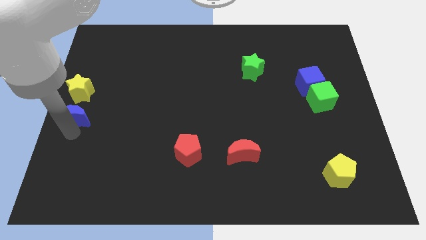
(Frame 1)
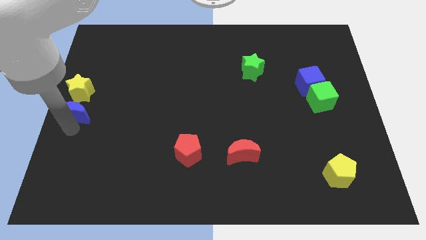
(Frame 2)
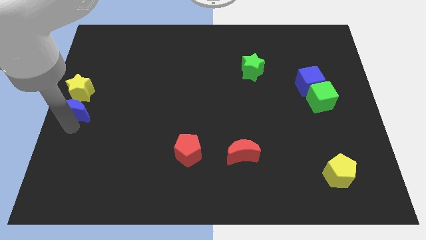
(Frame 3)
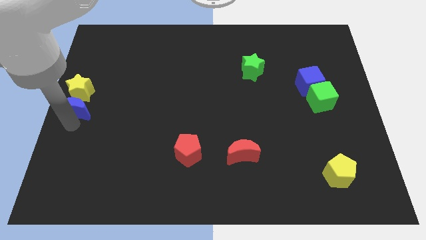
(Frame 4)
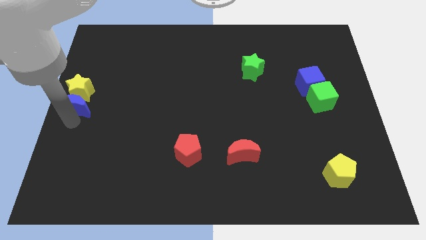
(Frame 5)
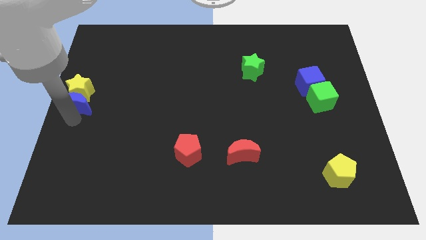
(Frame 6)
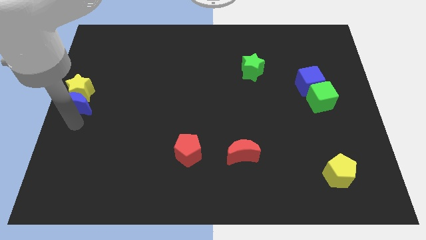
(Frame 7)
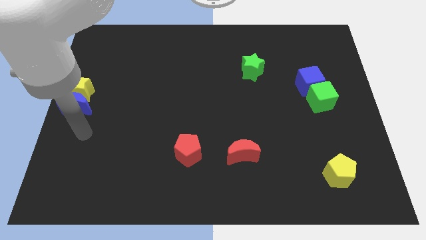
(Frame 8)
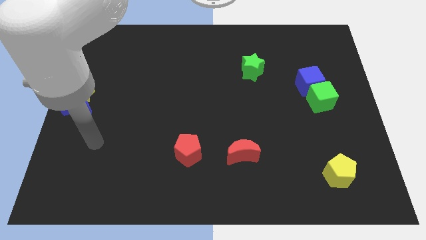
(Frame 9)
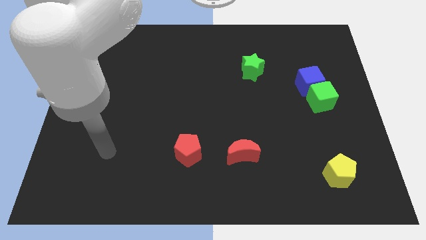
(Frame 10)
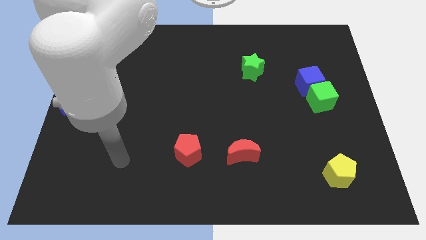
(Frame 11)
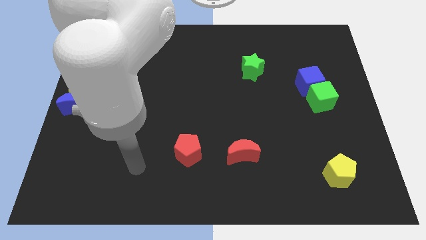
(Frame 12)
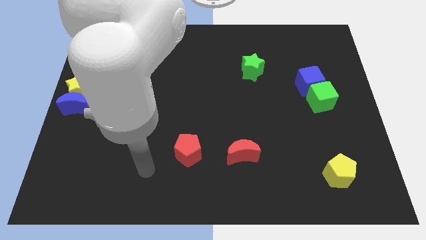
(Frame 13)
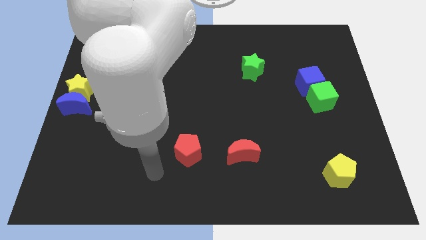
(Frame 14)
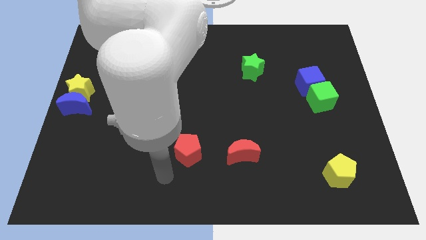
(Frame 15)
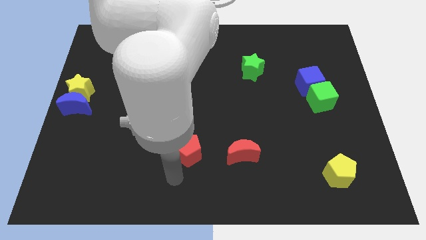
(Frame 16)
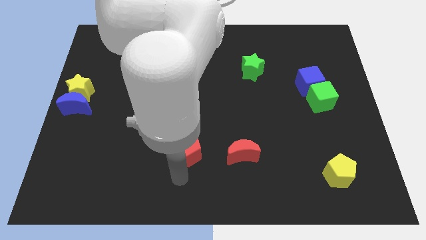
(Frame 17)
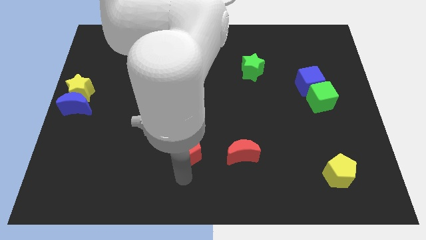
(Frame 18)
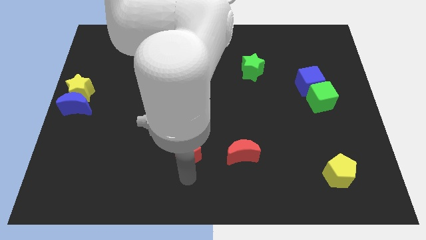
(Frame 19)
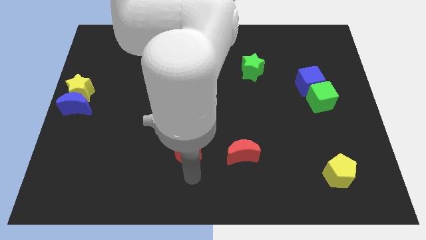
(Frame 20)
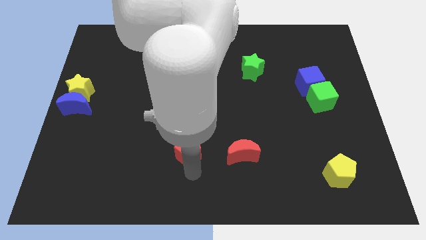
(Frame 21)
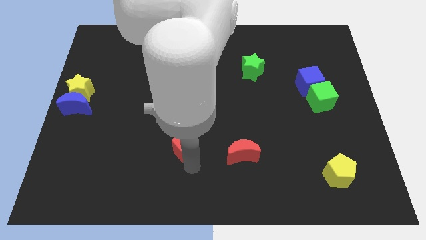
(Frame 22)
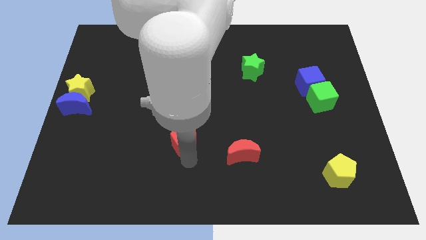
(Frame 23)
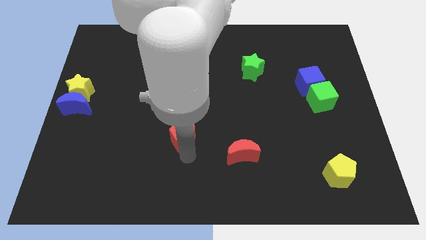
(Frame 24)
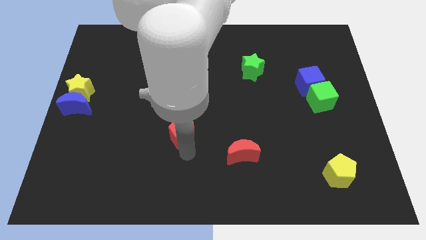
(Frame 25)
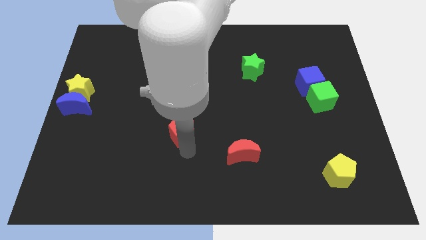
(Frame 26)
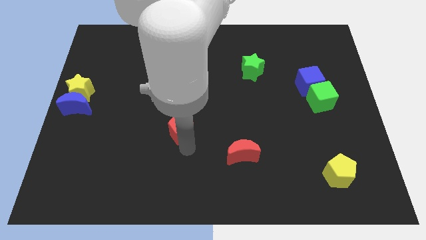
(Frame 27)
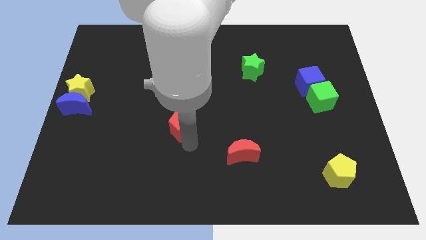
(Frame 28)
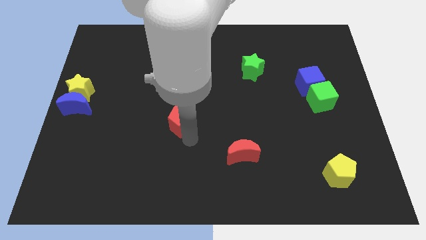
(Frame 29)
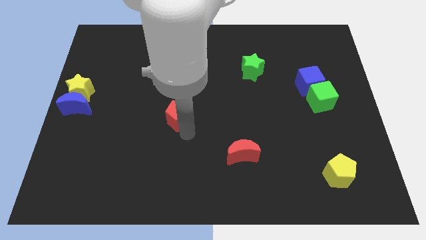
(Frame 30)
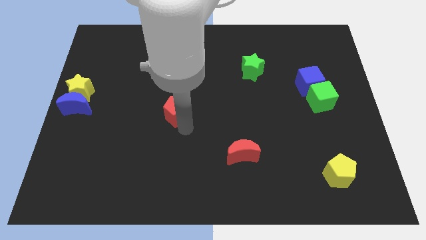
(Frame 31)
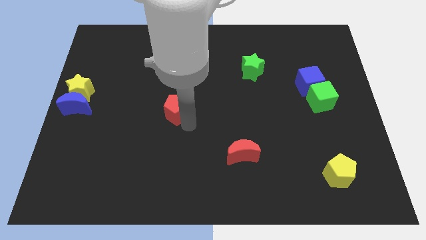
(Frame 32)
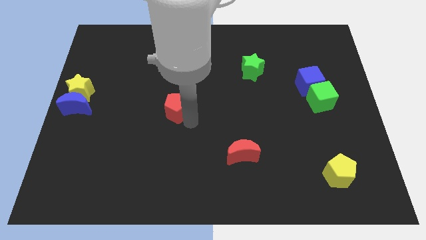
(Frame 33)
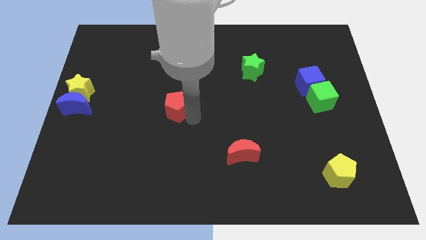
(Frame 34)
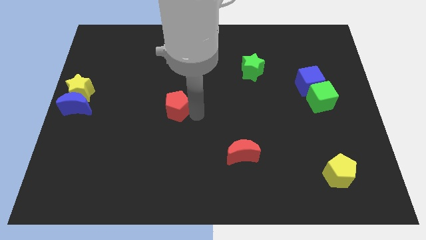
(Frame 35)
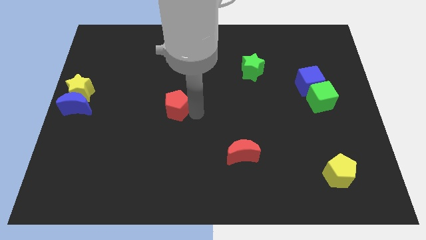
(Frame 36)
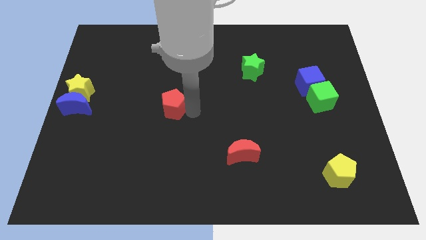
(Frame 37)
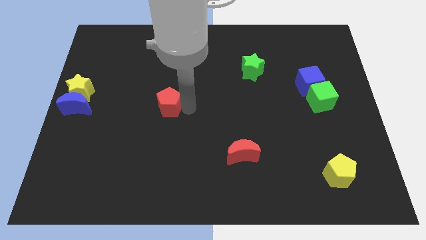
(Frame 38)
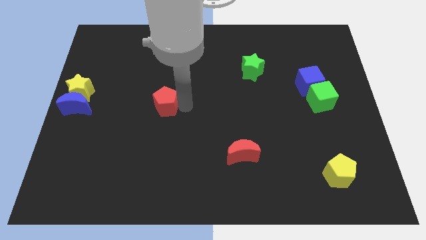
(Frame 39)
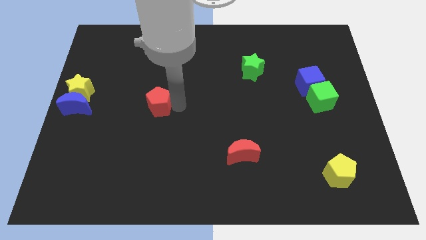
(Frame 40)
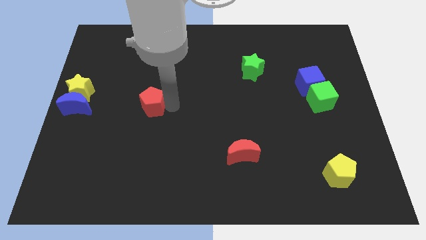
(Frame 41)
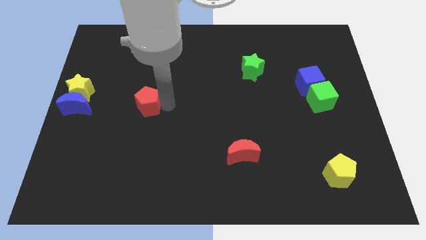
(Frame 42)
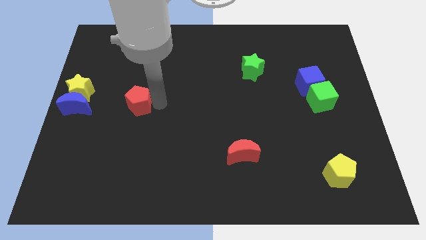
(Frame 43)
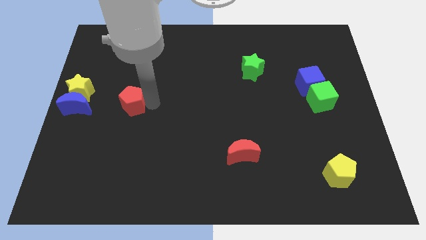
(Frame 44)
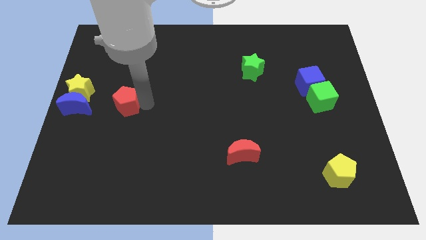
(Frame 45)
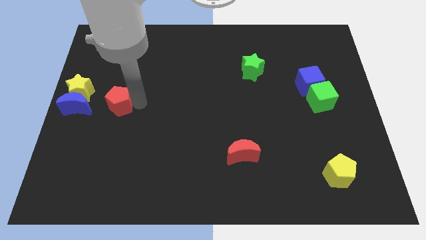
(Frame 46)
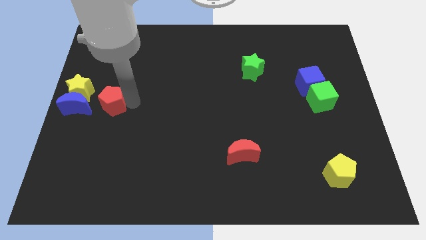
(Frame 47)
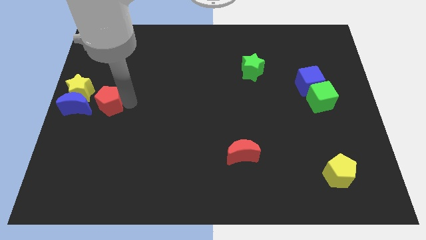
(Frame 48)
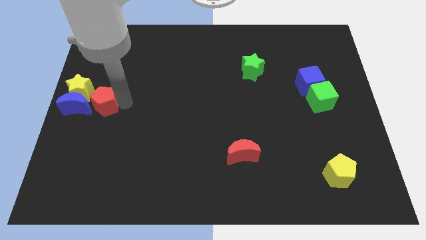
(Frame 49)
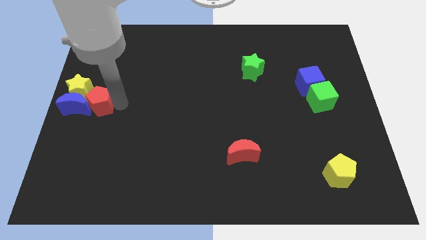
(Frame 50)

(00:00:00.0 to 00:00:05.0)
move the red pentagon close to the blue moon

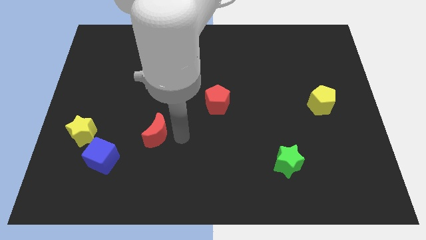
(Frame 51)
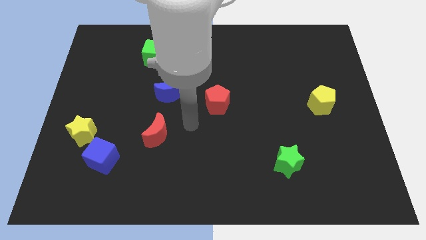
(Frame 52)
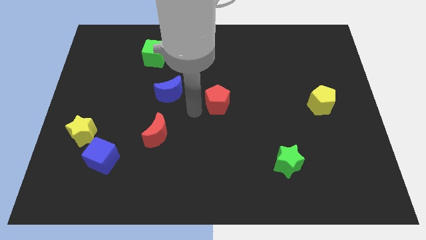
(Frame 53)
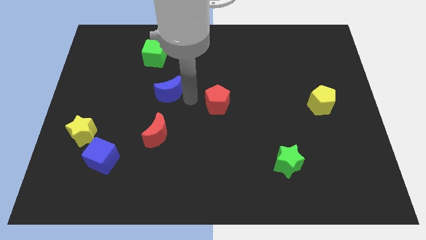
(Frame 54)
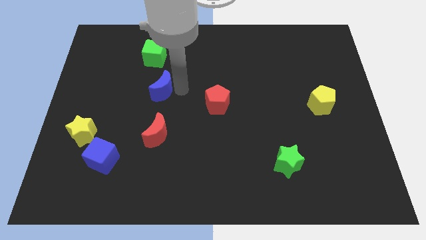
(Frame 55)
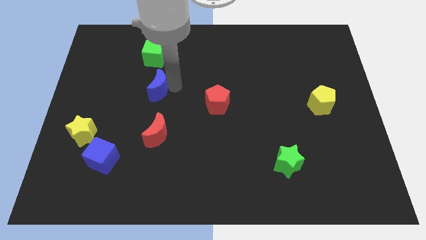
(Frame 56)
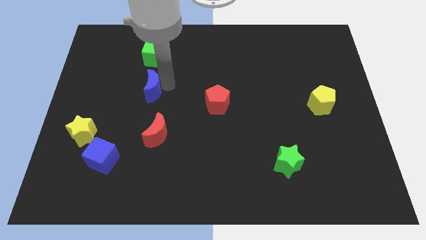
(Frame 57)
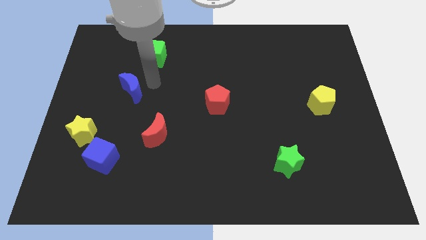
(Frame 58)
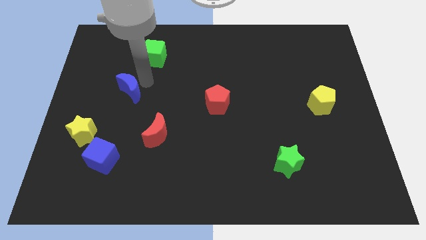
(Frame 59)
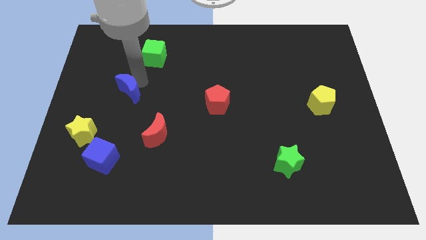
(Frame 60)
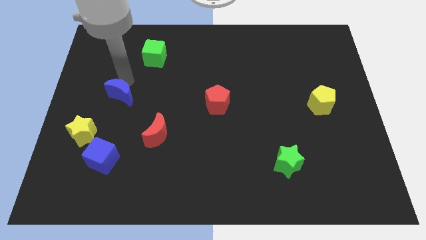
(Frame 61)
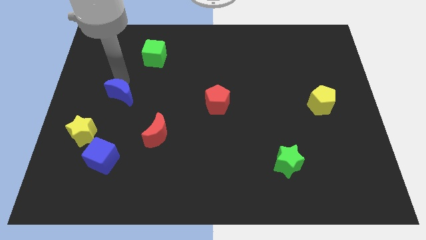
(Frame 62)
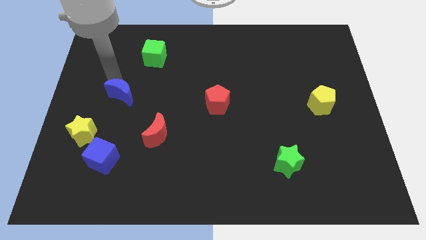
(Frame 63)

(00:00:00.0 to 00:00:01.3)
place the blue moon diagonally in between the green cube and the yellow star

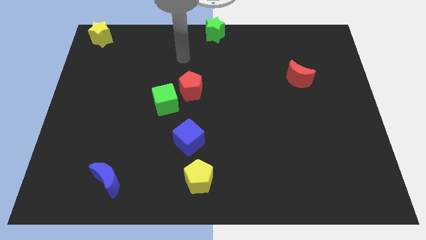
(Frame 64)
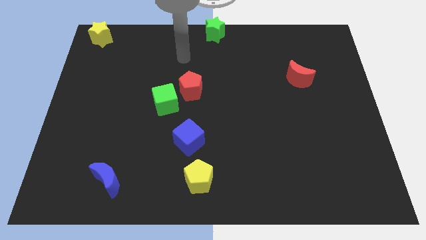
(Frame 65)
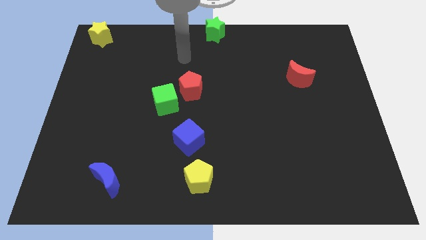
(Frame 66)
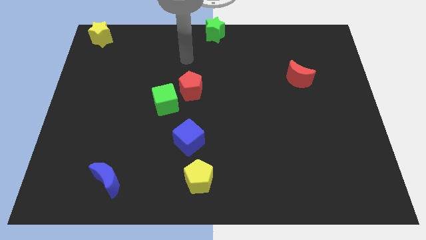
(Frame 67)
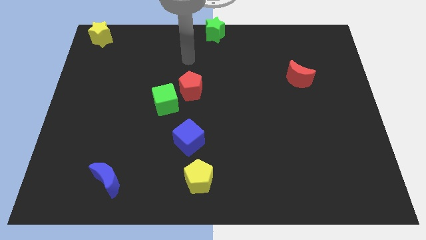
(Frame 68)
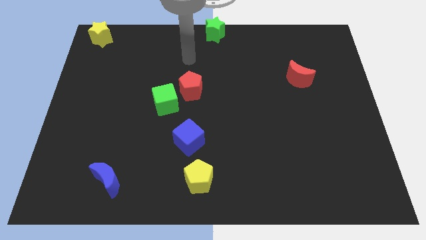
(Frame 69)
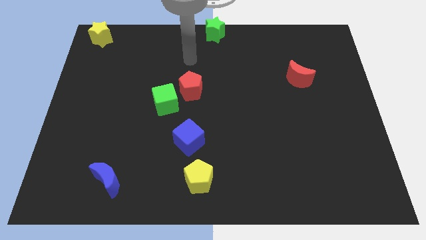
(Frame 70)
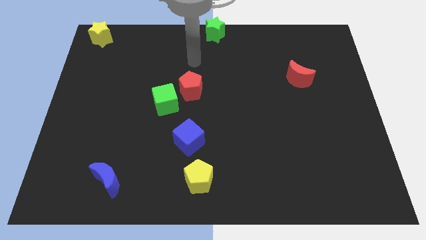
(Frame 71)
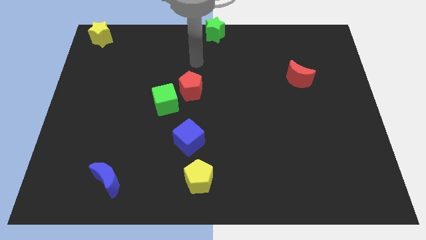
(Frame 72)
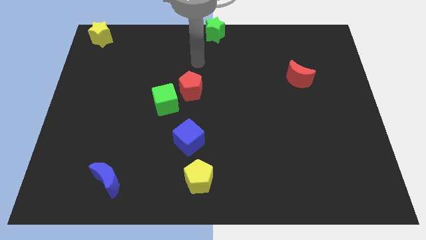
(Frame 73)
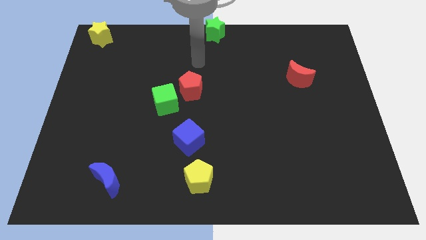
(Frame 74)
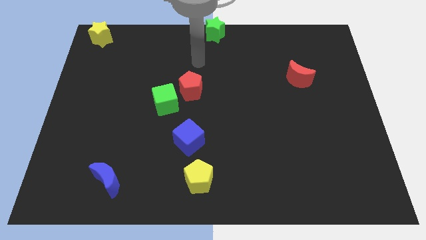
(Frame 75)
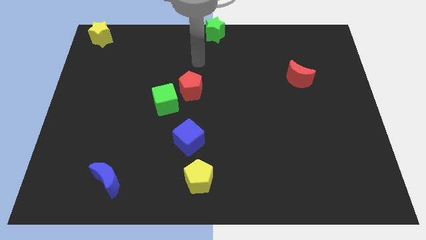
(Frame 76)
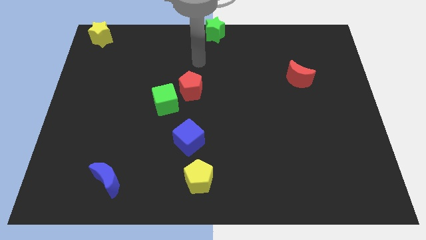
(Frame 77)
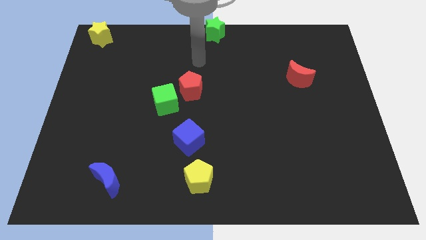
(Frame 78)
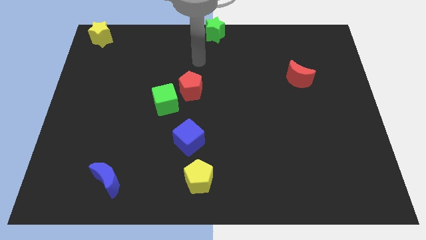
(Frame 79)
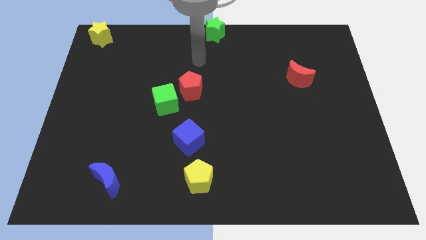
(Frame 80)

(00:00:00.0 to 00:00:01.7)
place your arm above the red pentagon

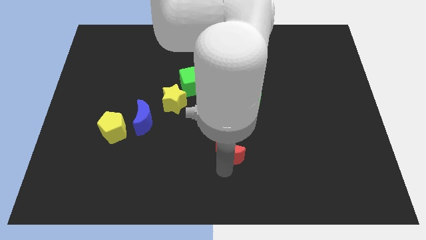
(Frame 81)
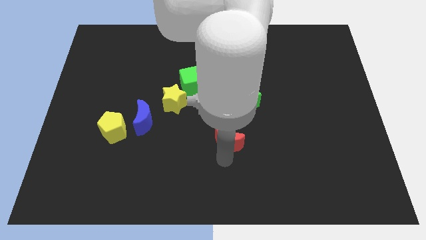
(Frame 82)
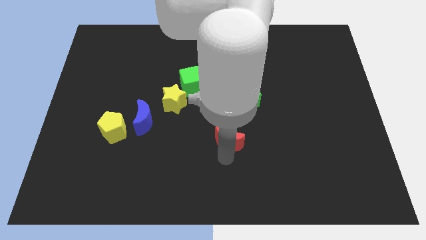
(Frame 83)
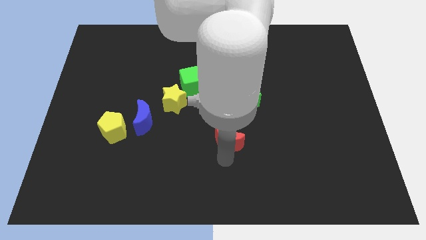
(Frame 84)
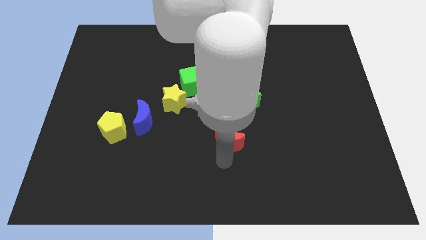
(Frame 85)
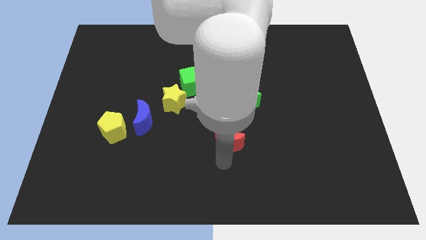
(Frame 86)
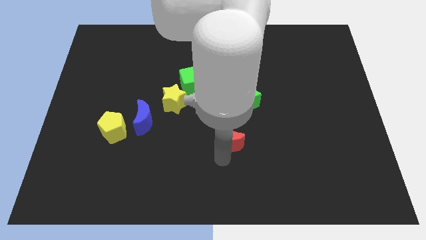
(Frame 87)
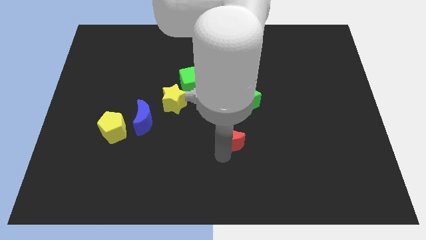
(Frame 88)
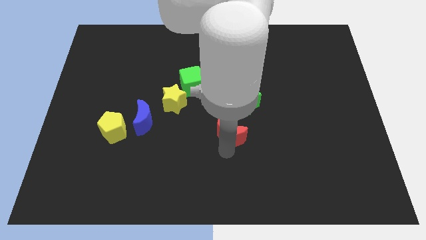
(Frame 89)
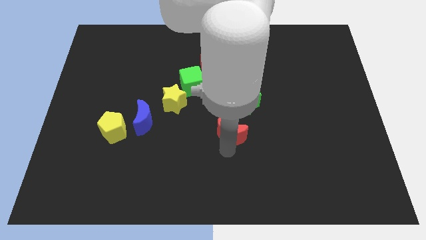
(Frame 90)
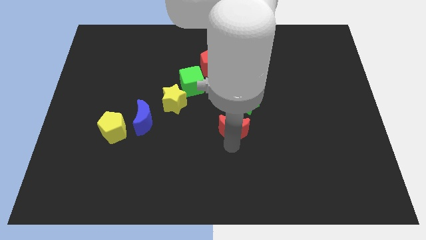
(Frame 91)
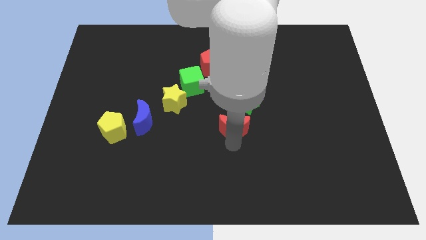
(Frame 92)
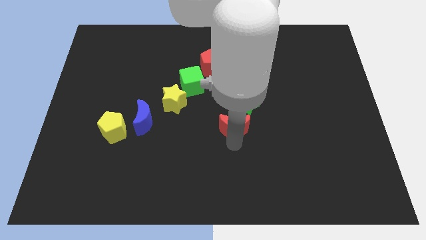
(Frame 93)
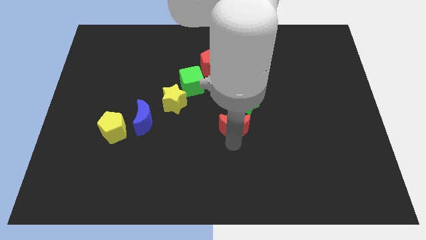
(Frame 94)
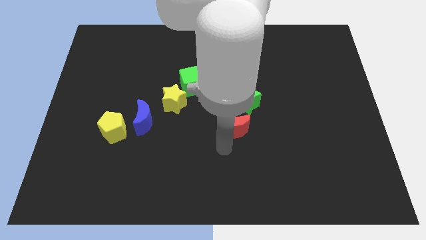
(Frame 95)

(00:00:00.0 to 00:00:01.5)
slide the red crescent slightly towards up
